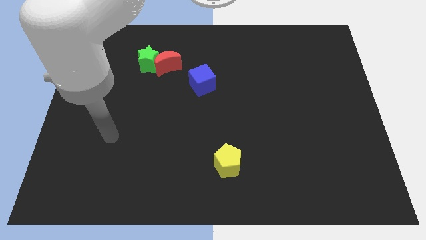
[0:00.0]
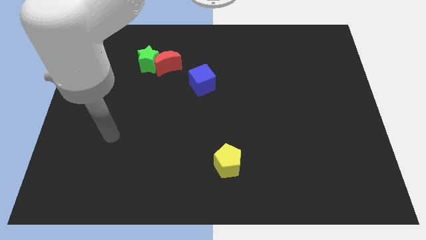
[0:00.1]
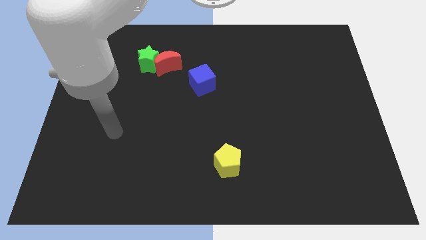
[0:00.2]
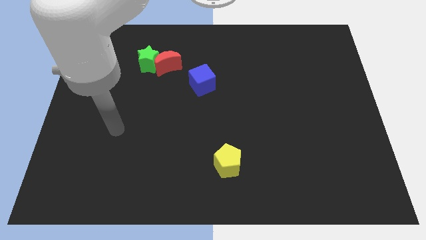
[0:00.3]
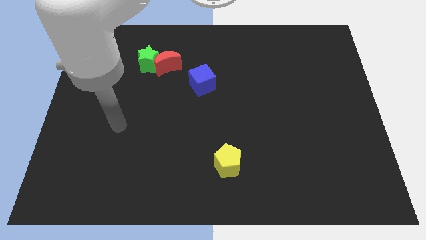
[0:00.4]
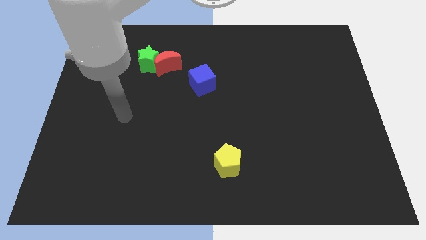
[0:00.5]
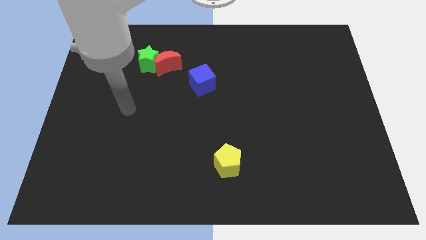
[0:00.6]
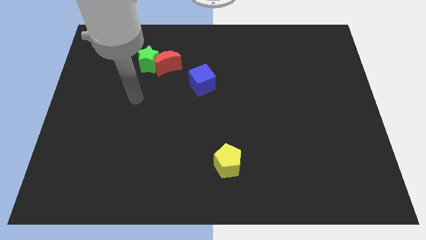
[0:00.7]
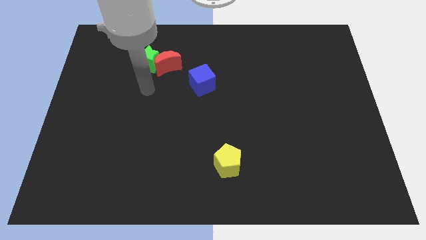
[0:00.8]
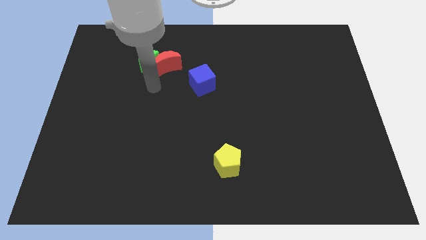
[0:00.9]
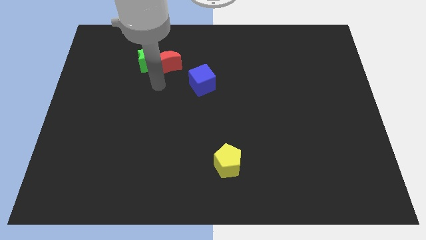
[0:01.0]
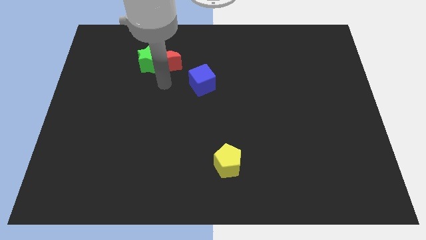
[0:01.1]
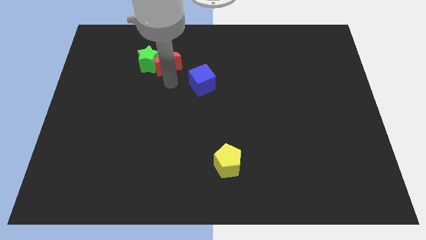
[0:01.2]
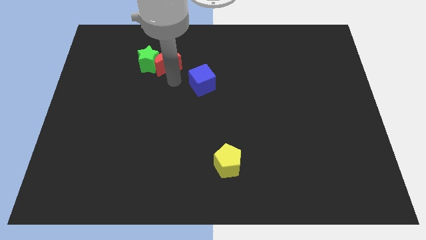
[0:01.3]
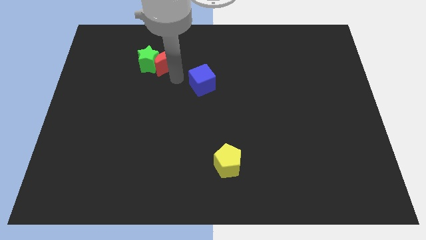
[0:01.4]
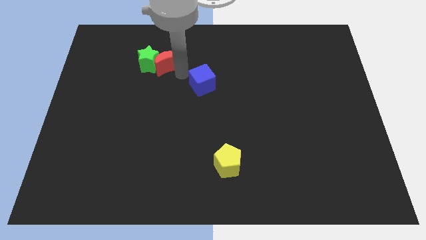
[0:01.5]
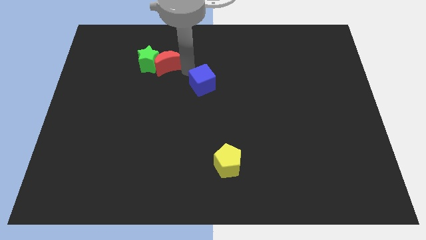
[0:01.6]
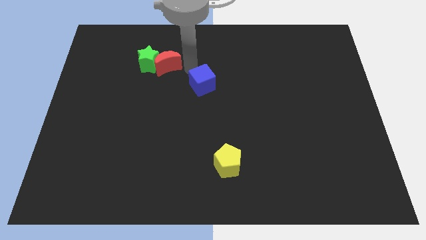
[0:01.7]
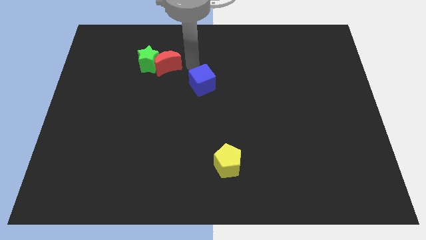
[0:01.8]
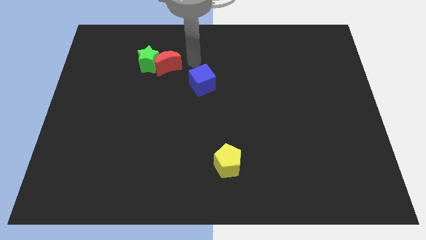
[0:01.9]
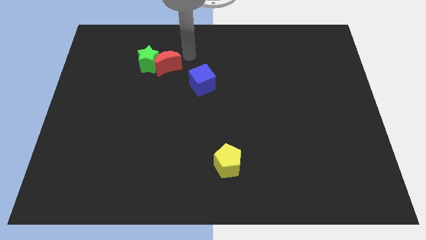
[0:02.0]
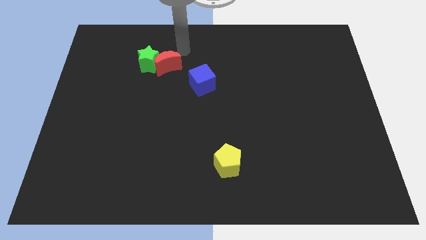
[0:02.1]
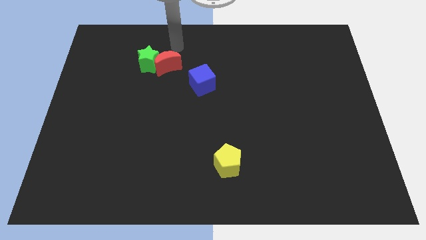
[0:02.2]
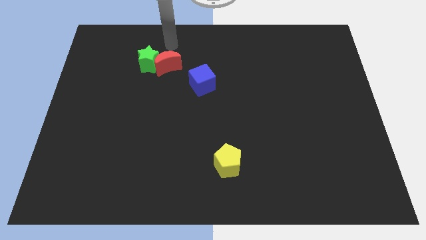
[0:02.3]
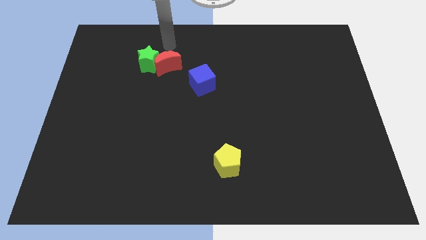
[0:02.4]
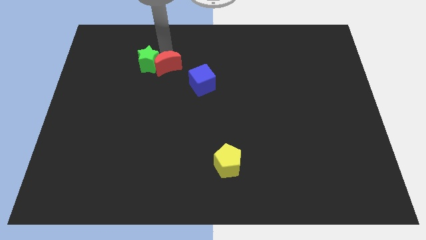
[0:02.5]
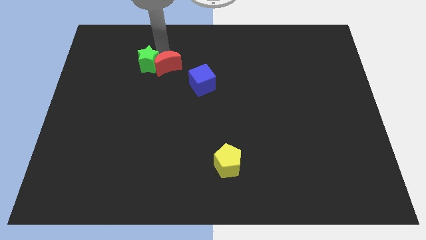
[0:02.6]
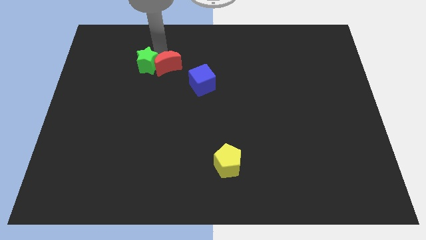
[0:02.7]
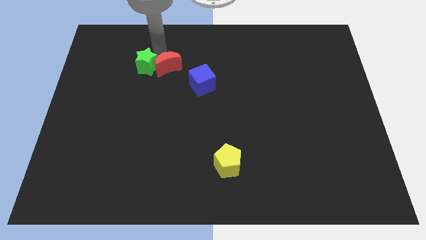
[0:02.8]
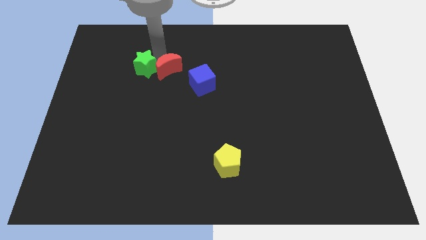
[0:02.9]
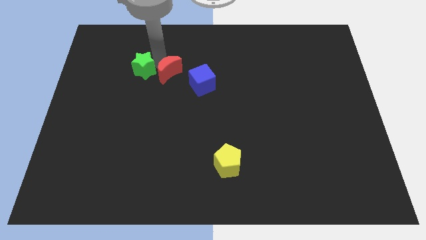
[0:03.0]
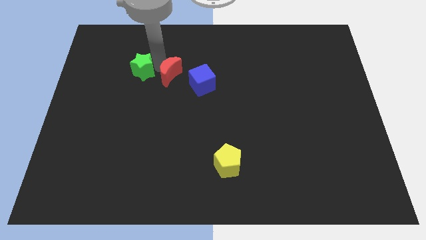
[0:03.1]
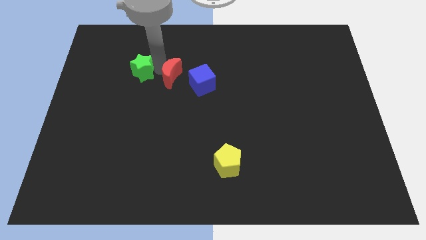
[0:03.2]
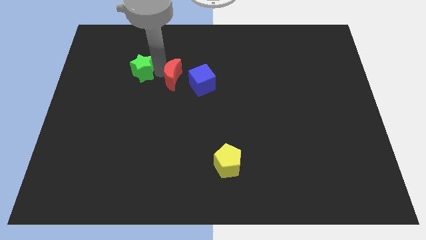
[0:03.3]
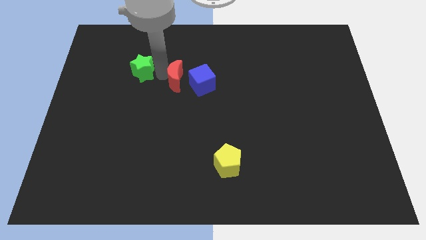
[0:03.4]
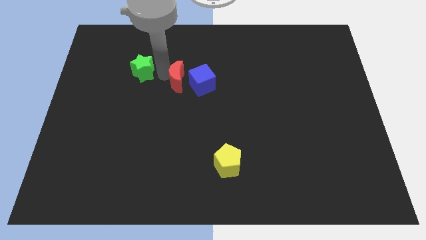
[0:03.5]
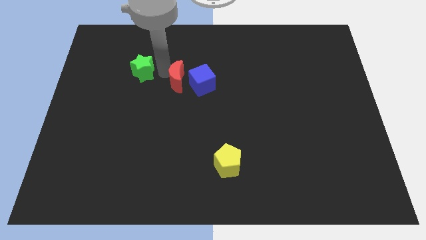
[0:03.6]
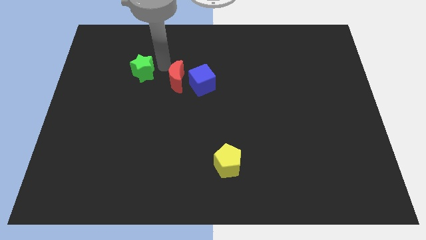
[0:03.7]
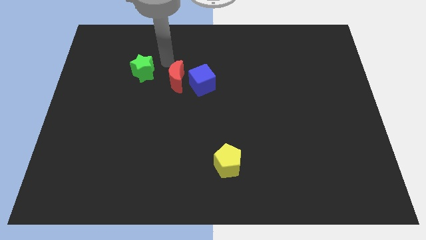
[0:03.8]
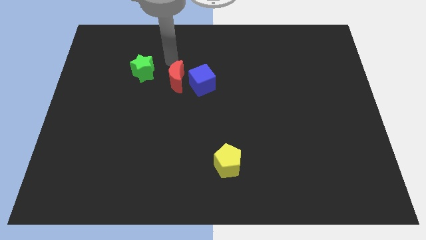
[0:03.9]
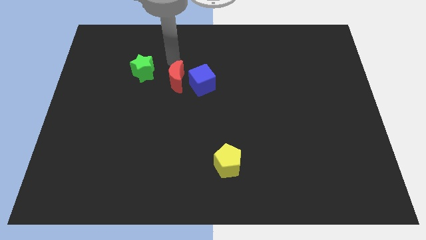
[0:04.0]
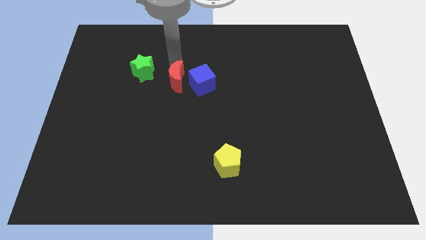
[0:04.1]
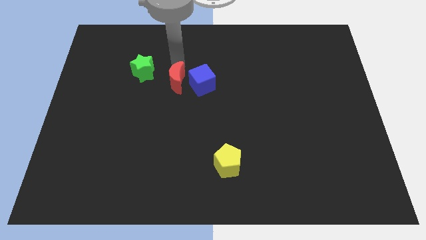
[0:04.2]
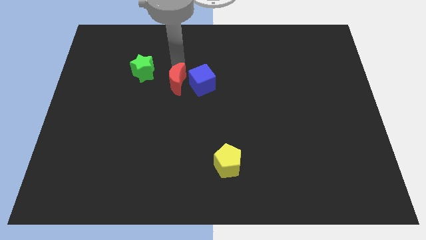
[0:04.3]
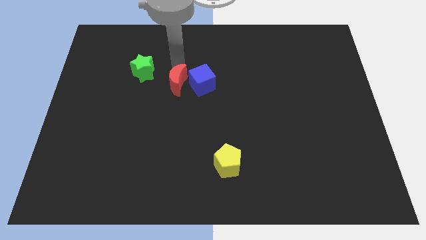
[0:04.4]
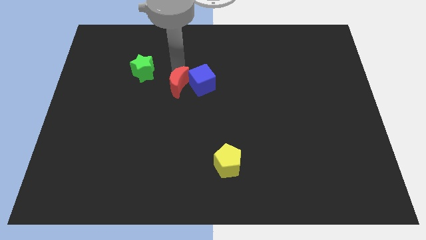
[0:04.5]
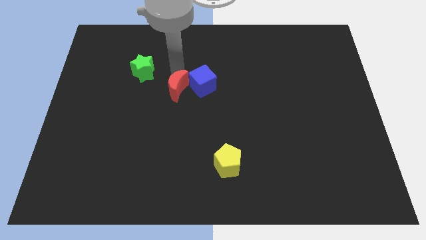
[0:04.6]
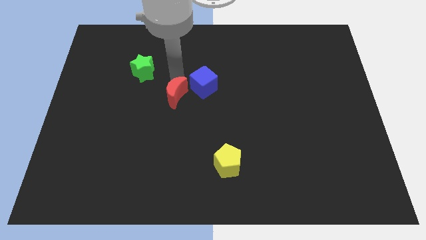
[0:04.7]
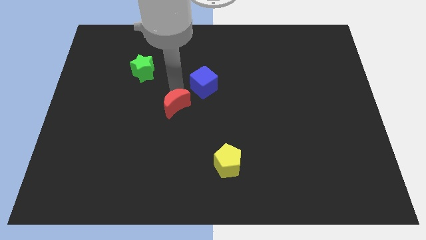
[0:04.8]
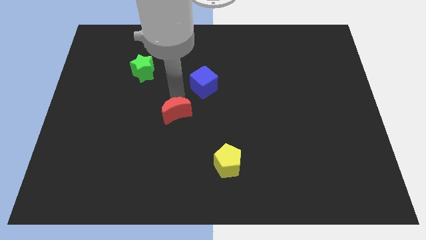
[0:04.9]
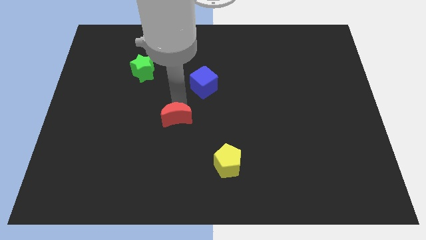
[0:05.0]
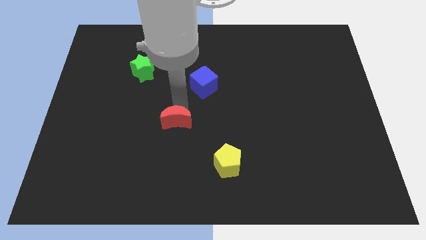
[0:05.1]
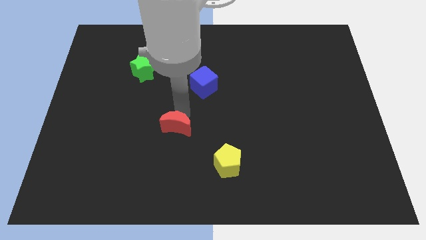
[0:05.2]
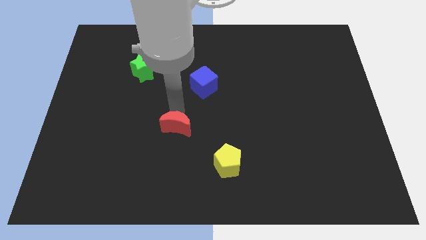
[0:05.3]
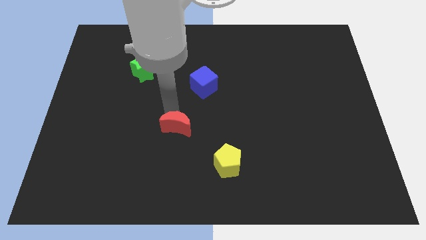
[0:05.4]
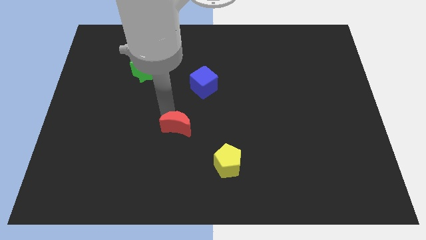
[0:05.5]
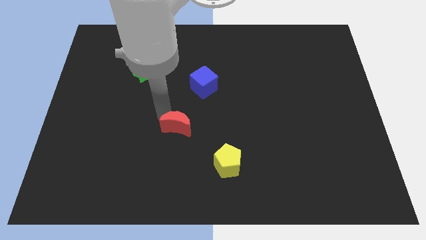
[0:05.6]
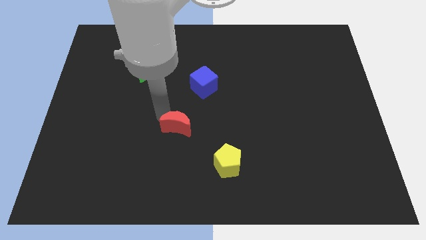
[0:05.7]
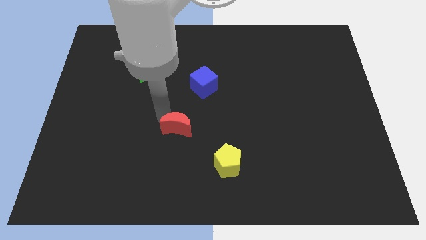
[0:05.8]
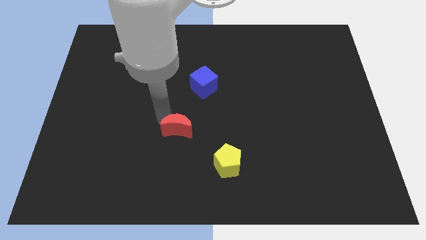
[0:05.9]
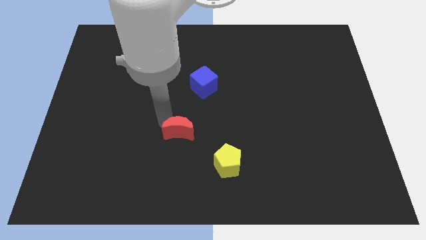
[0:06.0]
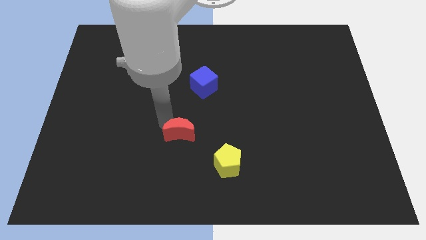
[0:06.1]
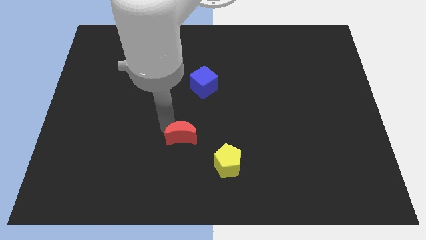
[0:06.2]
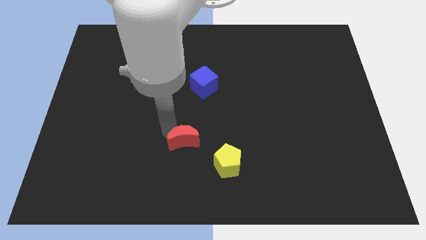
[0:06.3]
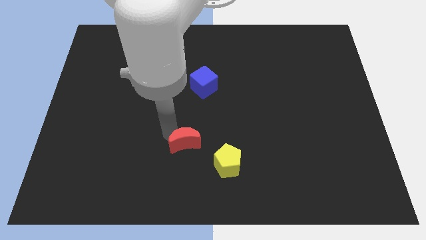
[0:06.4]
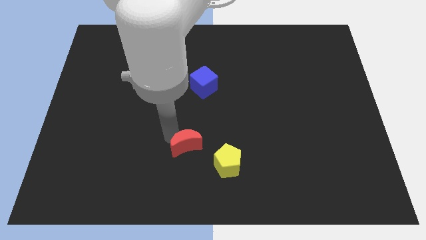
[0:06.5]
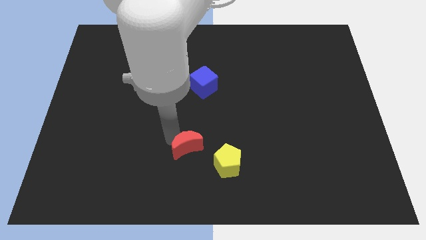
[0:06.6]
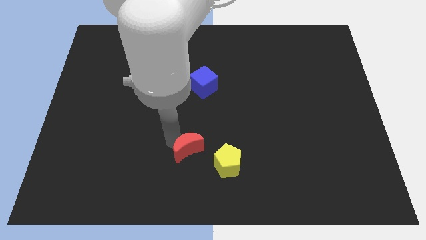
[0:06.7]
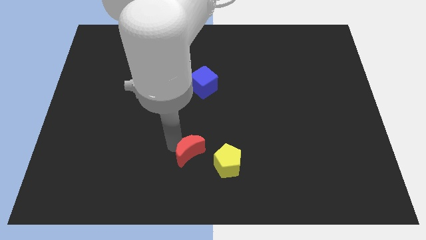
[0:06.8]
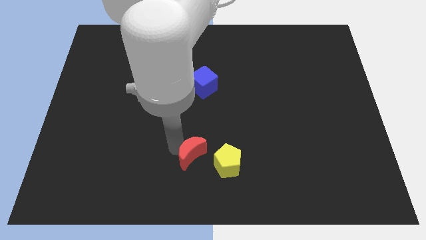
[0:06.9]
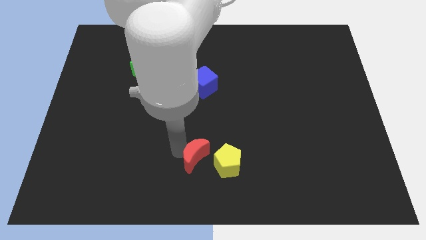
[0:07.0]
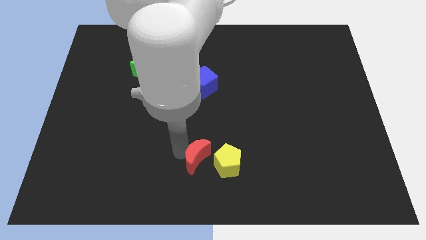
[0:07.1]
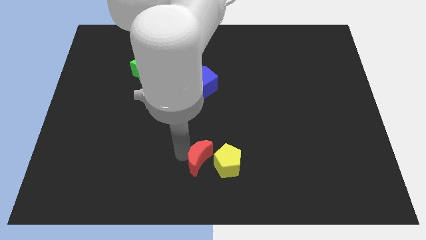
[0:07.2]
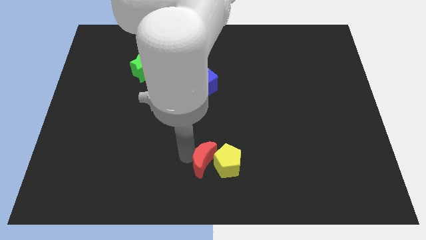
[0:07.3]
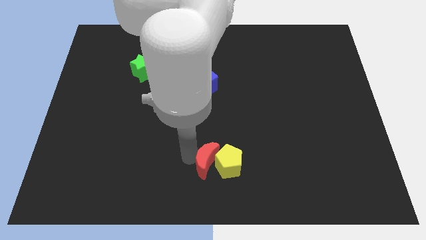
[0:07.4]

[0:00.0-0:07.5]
slide the red block towards the yellow pentagon

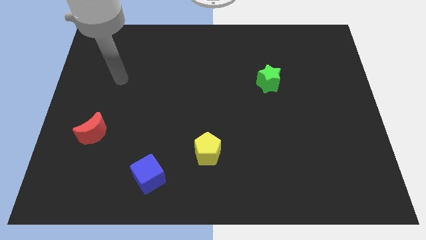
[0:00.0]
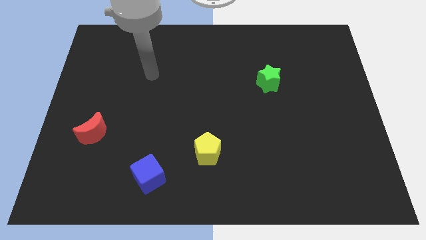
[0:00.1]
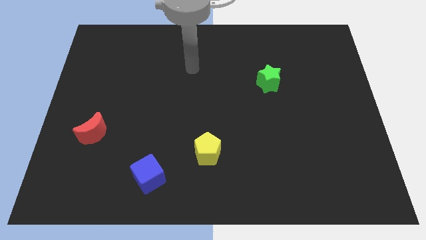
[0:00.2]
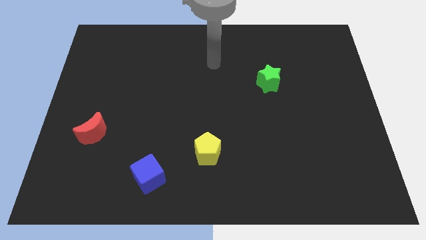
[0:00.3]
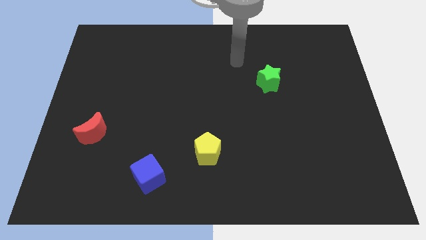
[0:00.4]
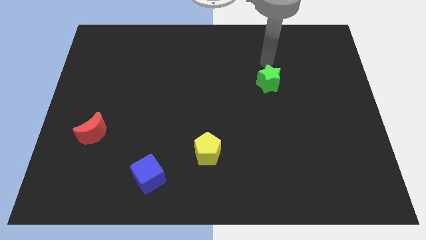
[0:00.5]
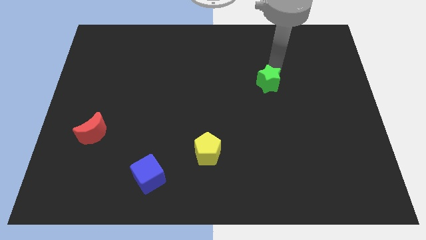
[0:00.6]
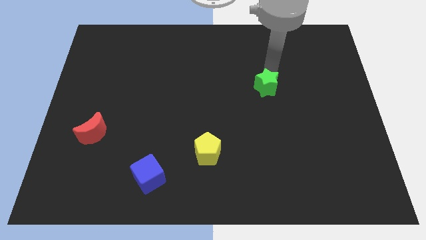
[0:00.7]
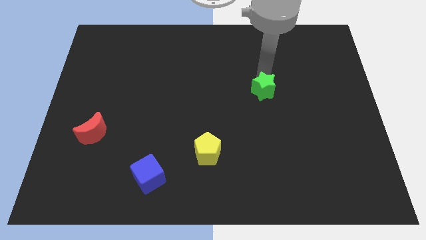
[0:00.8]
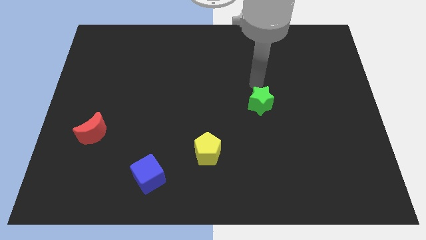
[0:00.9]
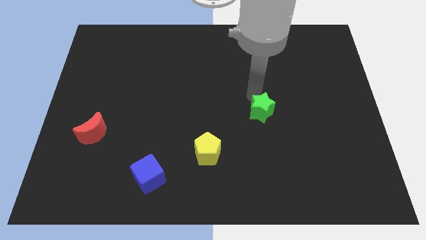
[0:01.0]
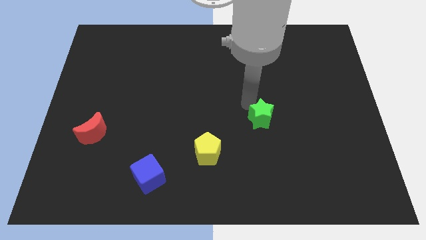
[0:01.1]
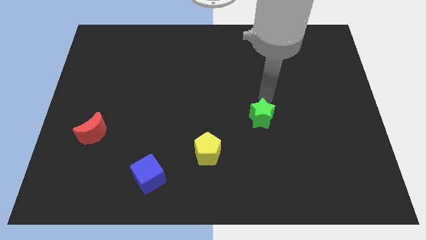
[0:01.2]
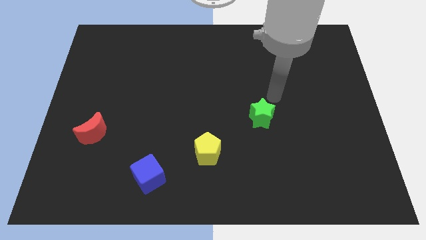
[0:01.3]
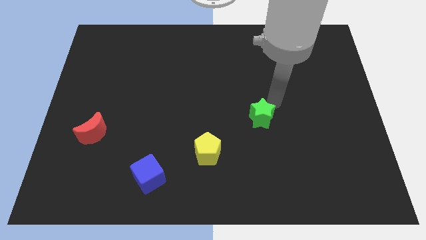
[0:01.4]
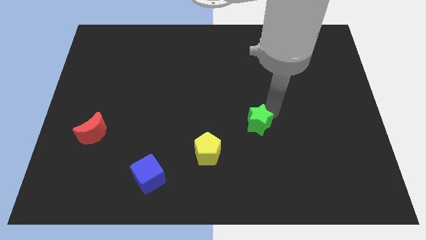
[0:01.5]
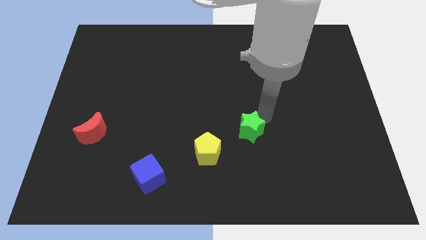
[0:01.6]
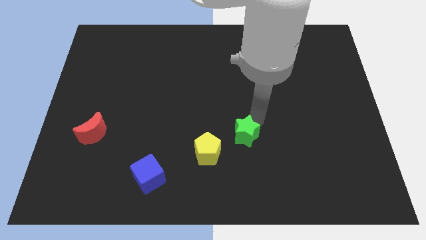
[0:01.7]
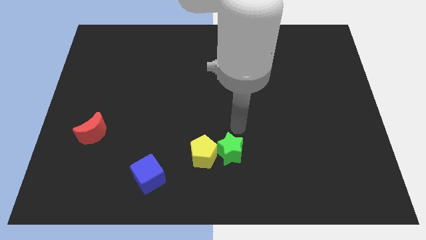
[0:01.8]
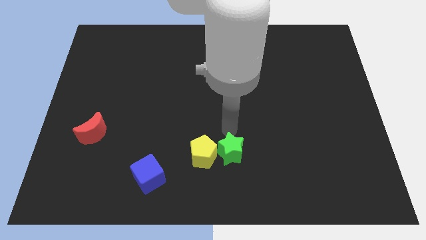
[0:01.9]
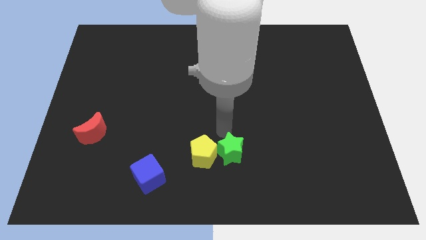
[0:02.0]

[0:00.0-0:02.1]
move the star close to the pentagon
